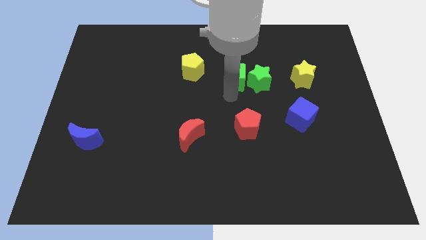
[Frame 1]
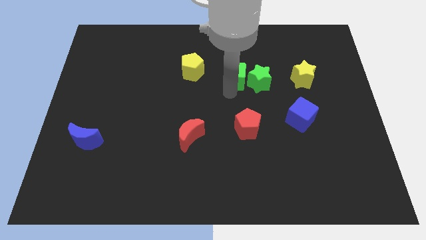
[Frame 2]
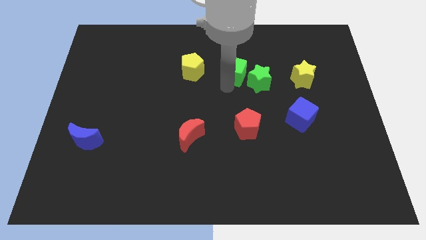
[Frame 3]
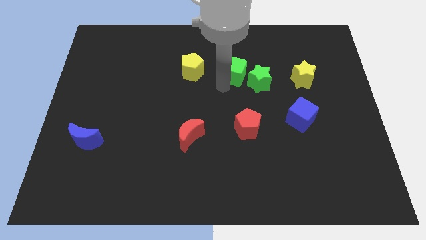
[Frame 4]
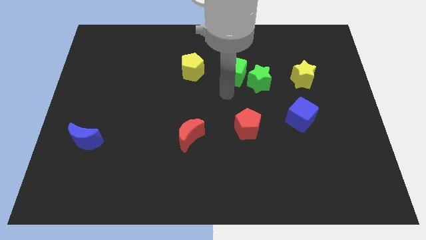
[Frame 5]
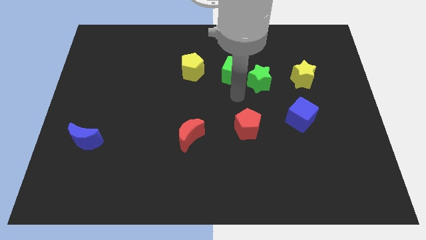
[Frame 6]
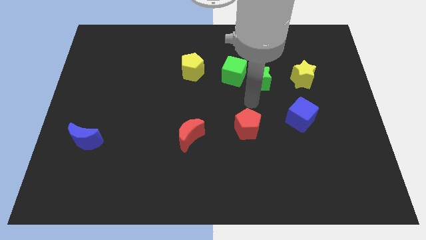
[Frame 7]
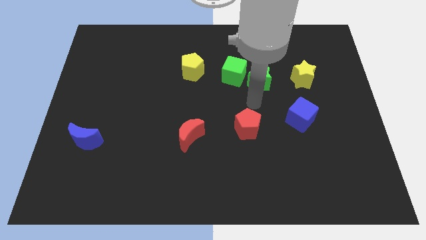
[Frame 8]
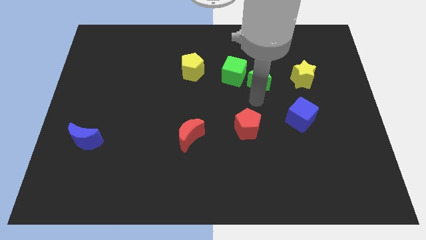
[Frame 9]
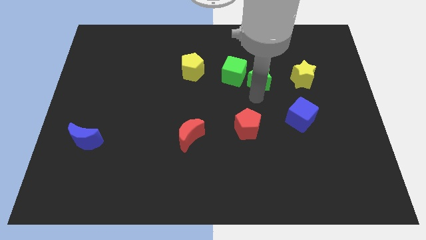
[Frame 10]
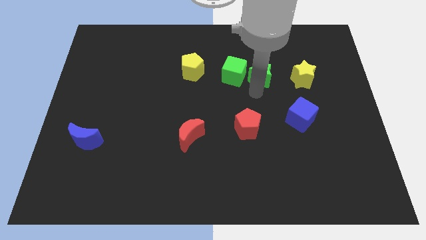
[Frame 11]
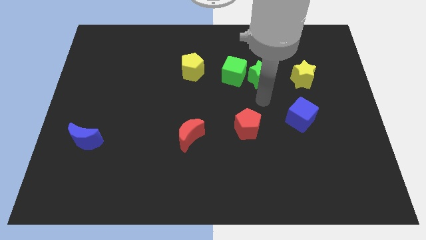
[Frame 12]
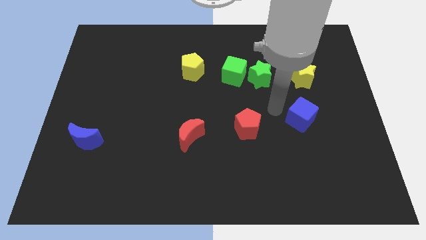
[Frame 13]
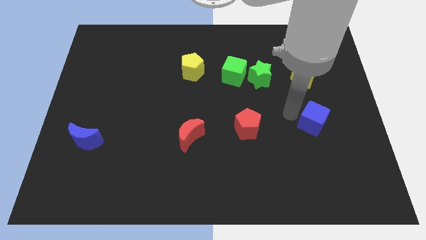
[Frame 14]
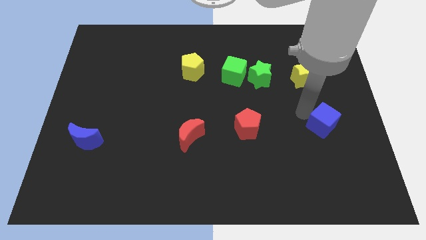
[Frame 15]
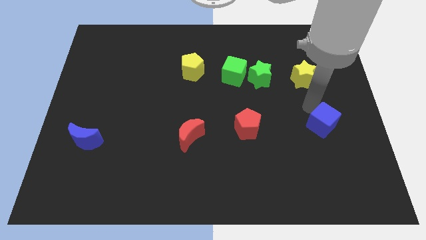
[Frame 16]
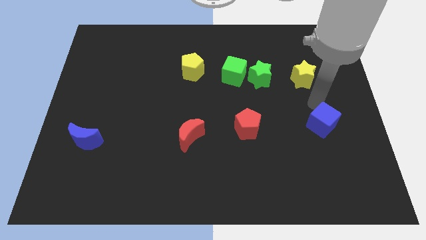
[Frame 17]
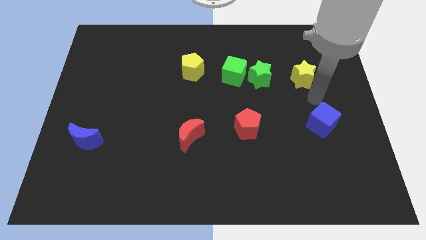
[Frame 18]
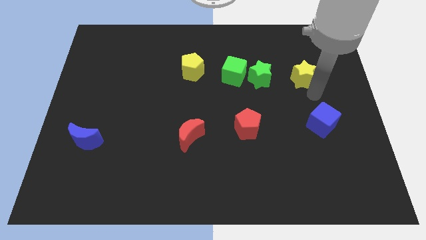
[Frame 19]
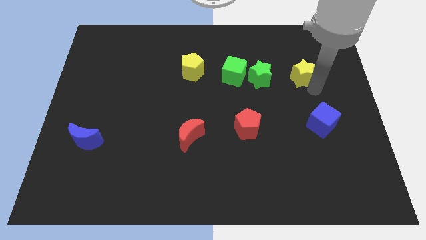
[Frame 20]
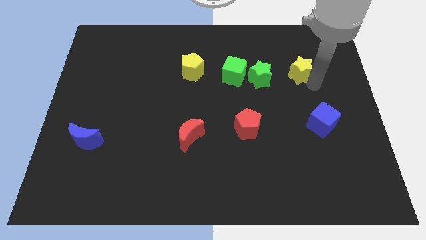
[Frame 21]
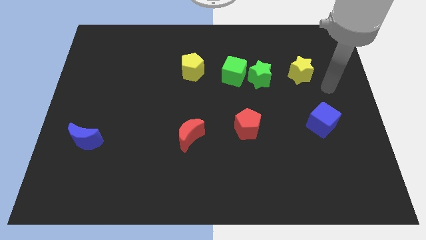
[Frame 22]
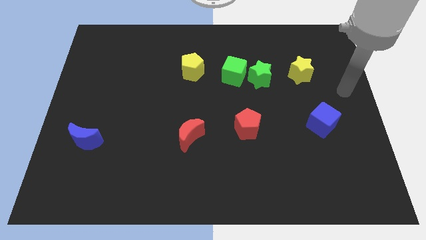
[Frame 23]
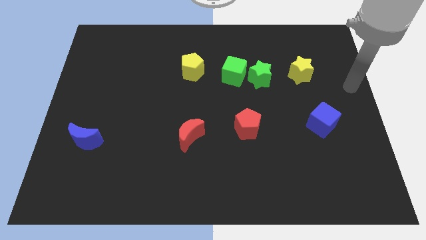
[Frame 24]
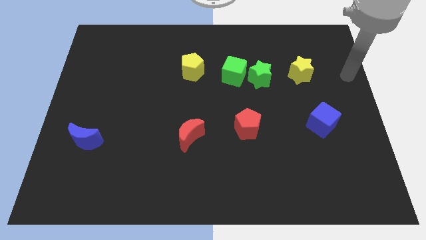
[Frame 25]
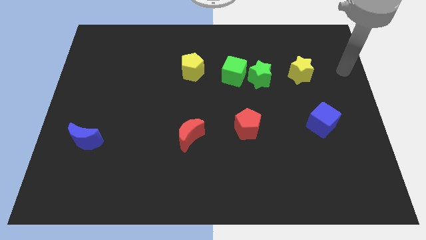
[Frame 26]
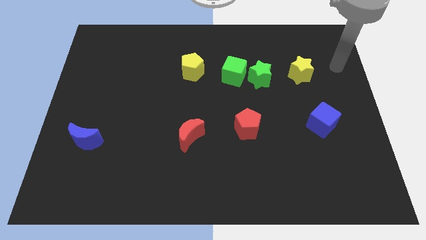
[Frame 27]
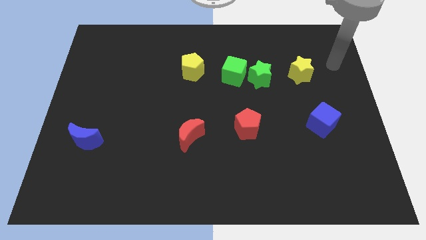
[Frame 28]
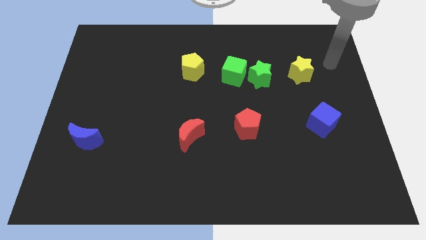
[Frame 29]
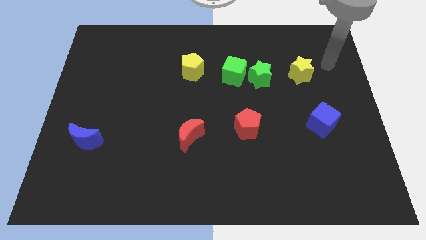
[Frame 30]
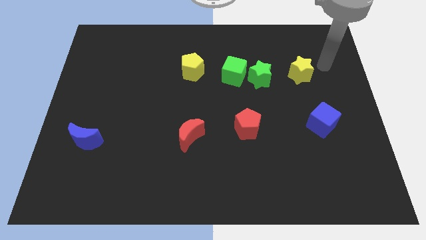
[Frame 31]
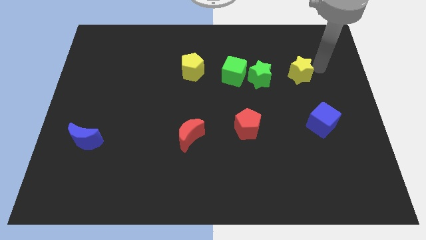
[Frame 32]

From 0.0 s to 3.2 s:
move the green blocks slightly to the up

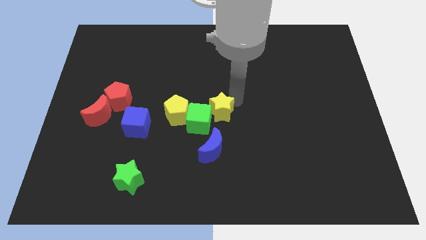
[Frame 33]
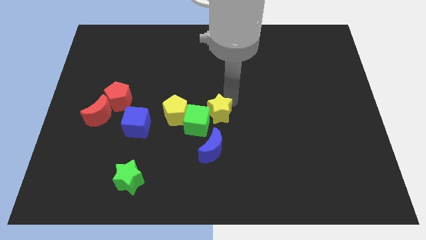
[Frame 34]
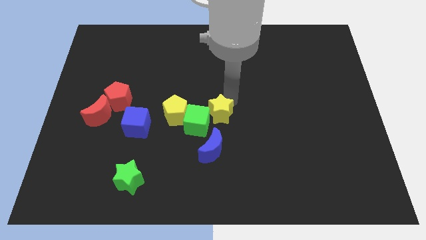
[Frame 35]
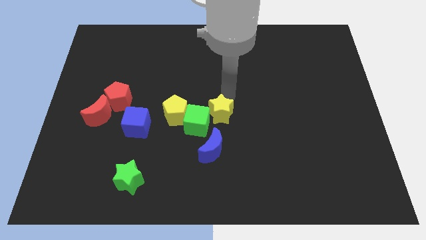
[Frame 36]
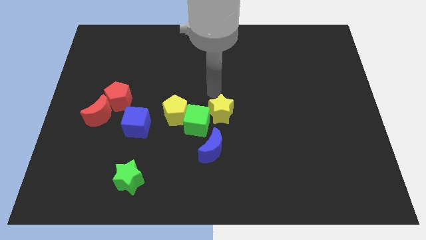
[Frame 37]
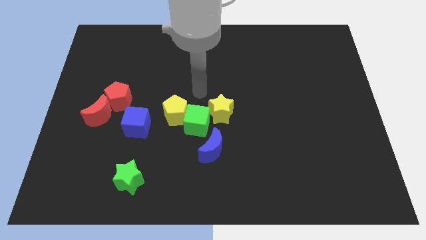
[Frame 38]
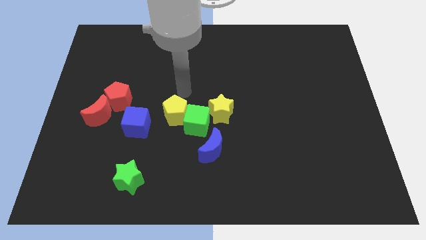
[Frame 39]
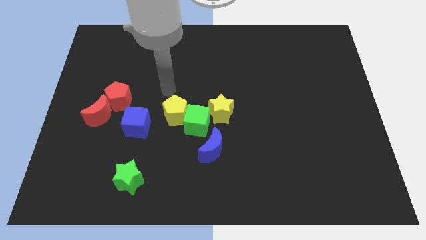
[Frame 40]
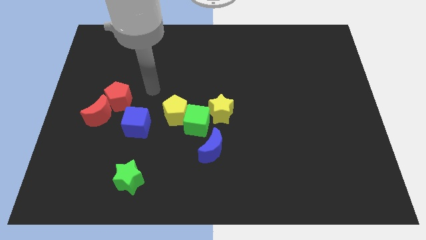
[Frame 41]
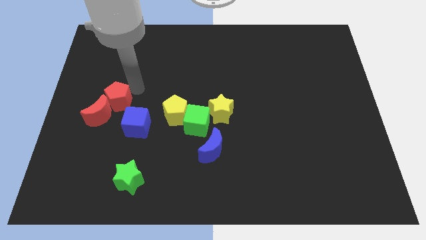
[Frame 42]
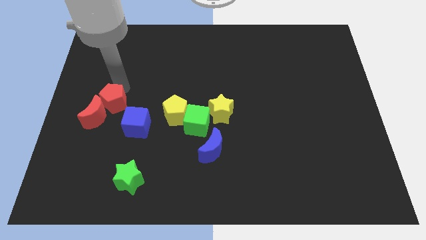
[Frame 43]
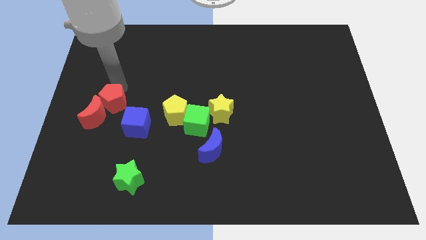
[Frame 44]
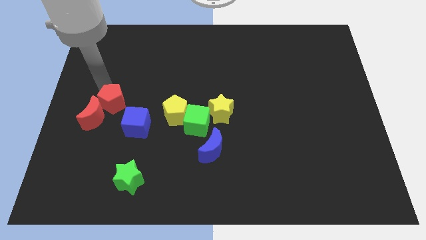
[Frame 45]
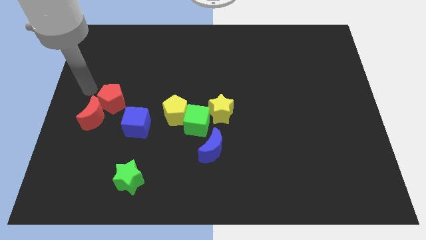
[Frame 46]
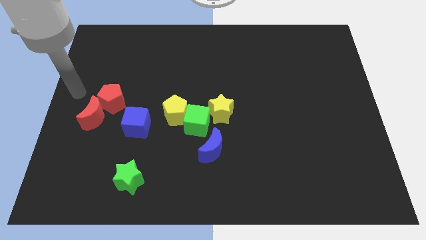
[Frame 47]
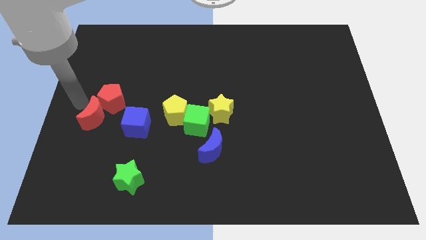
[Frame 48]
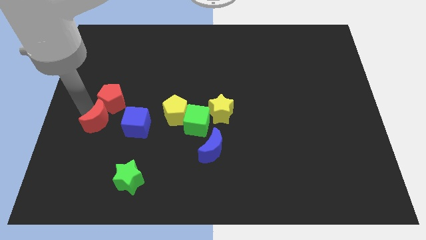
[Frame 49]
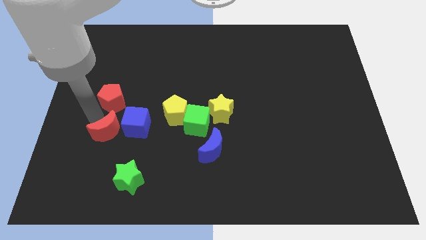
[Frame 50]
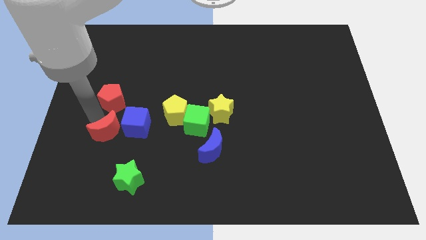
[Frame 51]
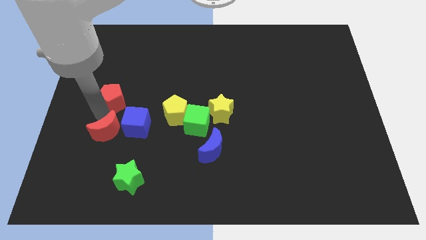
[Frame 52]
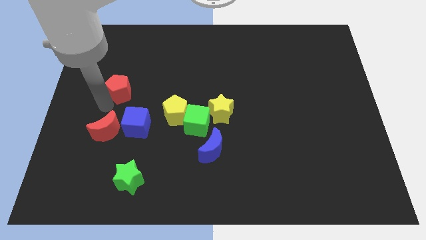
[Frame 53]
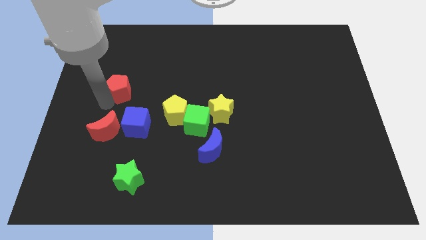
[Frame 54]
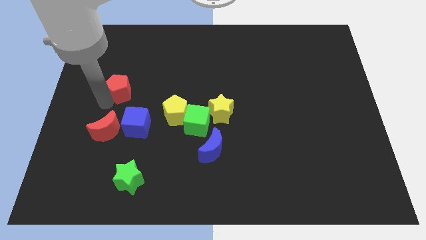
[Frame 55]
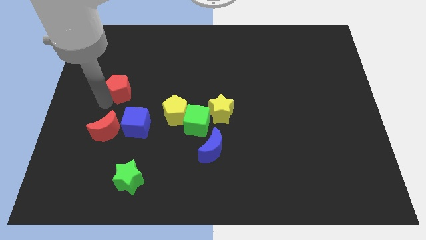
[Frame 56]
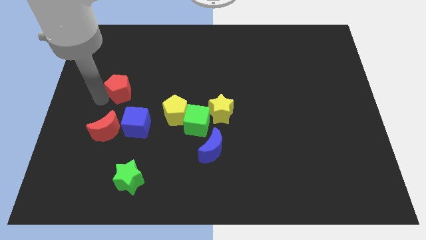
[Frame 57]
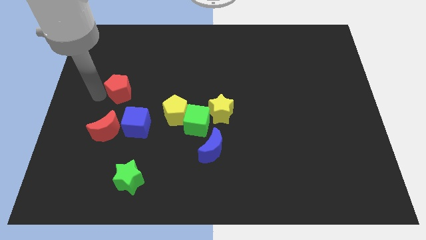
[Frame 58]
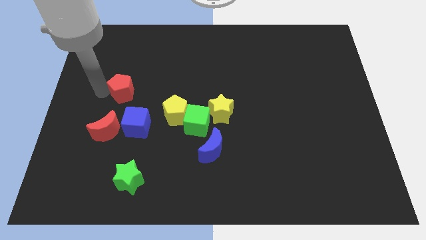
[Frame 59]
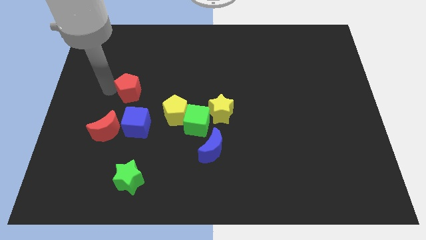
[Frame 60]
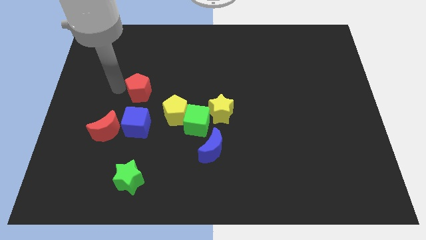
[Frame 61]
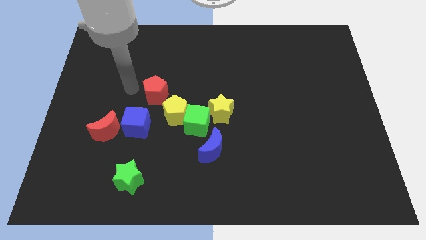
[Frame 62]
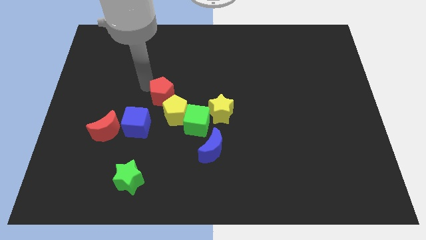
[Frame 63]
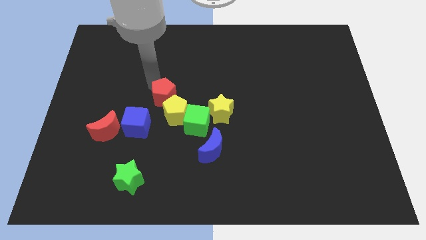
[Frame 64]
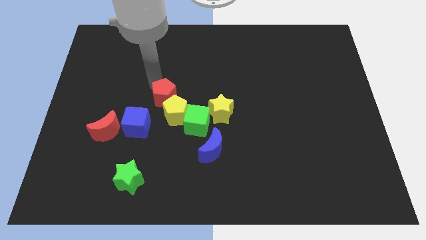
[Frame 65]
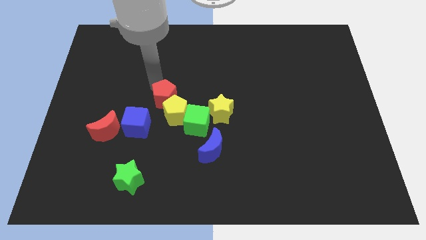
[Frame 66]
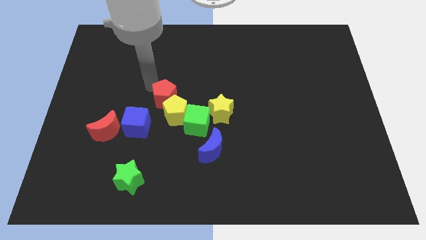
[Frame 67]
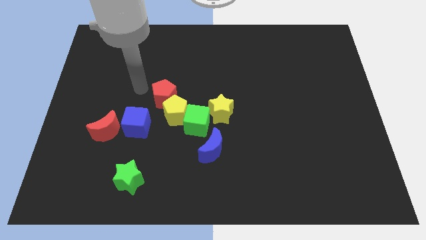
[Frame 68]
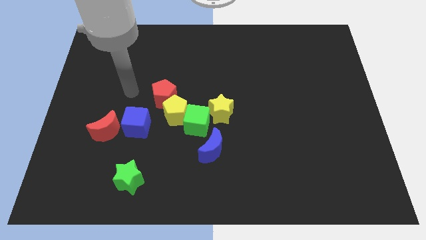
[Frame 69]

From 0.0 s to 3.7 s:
drag the red pentagon at the top left of the yellow pentagon

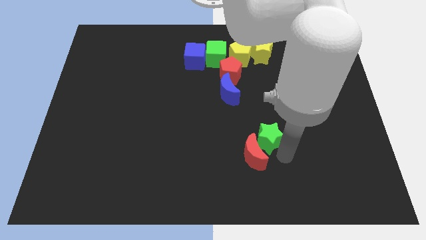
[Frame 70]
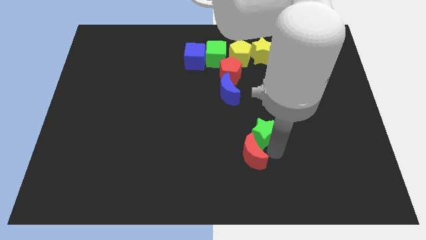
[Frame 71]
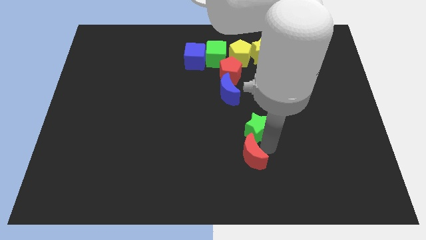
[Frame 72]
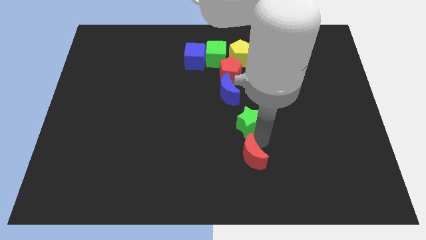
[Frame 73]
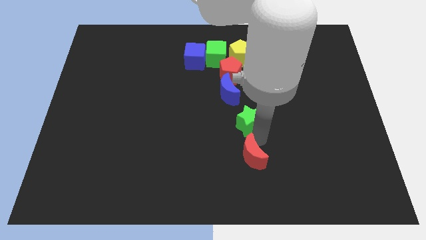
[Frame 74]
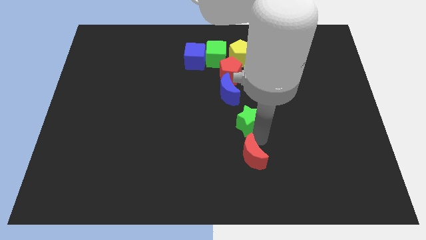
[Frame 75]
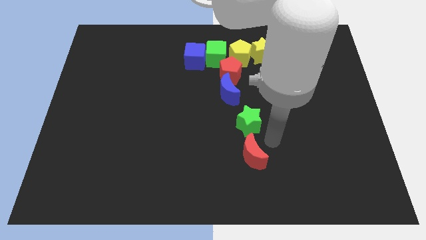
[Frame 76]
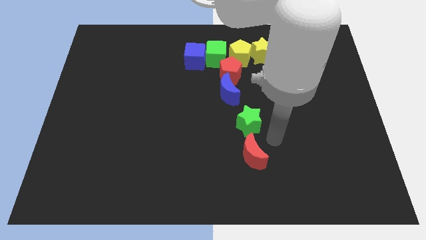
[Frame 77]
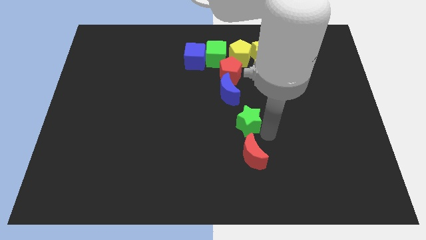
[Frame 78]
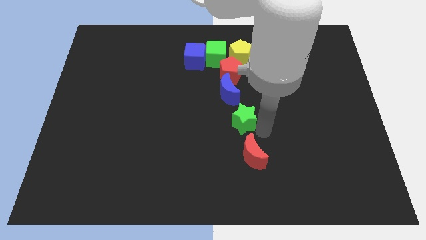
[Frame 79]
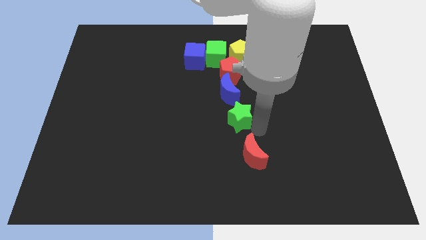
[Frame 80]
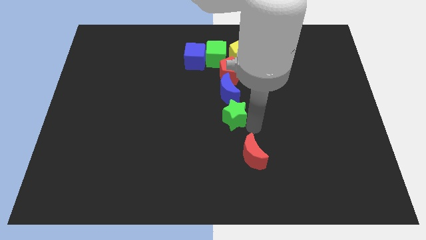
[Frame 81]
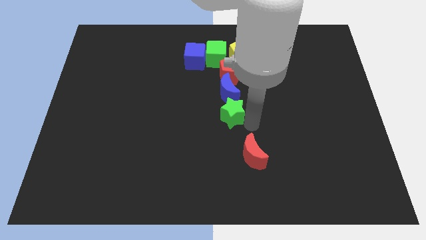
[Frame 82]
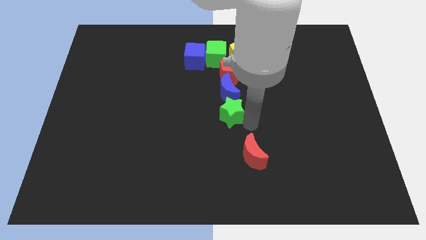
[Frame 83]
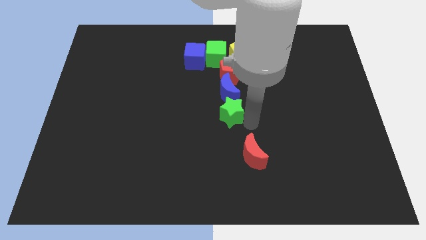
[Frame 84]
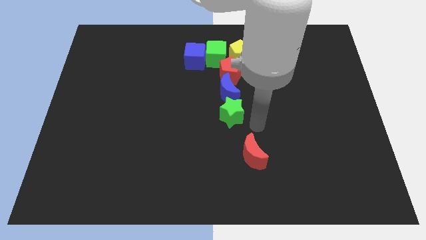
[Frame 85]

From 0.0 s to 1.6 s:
move the green star bottom of the blue crescent

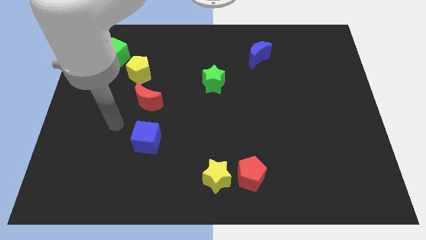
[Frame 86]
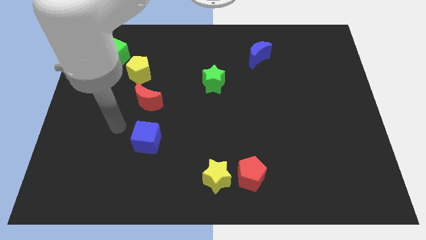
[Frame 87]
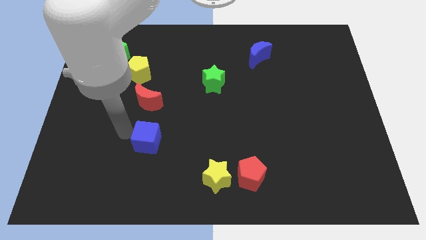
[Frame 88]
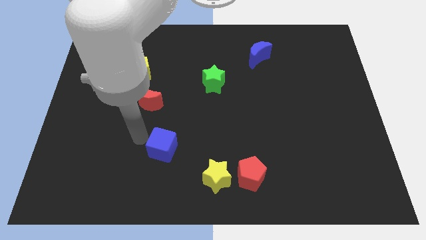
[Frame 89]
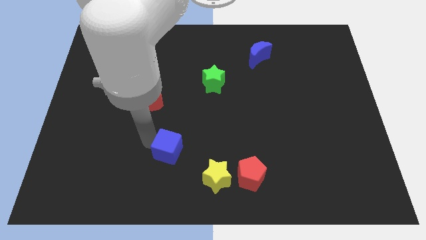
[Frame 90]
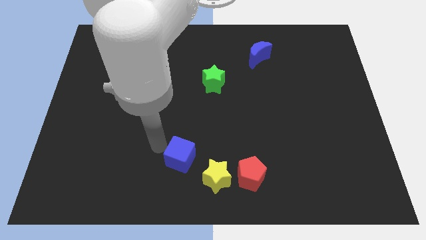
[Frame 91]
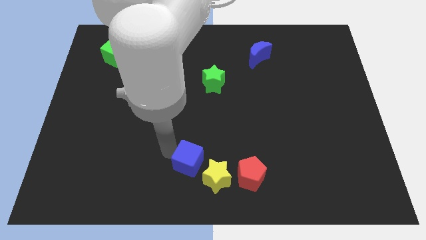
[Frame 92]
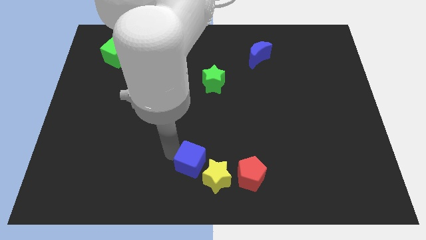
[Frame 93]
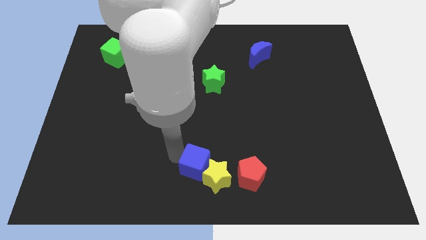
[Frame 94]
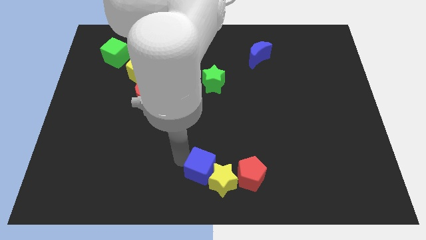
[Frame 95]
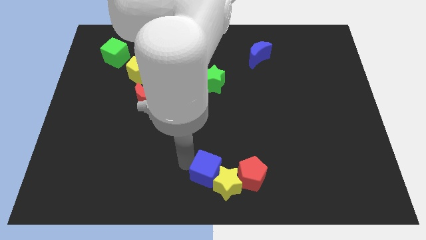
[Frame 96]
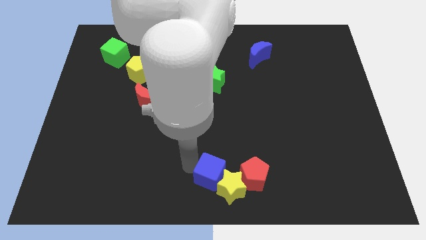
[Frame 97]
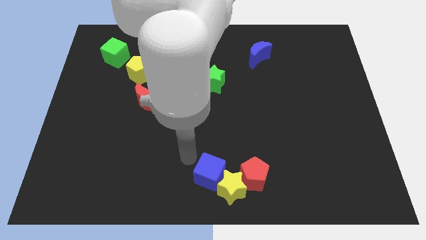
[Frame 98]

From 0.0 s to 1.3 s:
push the blue cube into the yellow star
